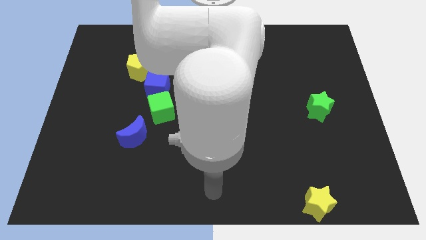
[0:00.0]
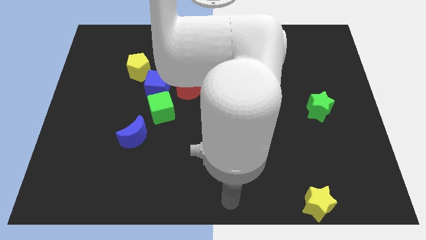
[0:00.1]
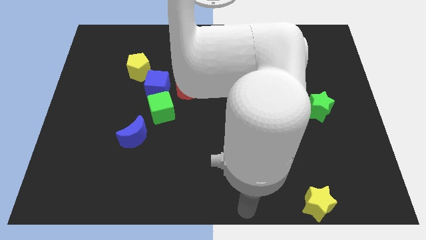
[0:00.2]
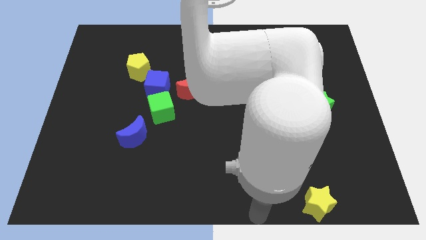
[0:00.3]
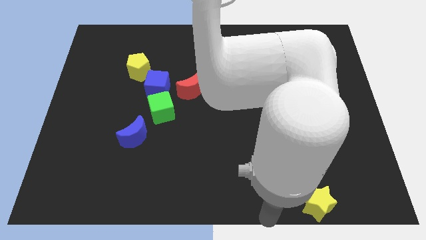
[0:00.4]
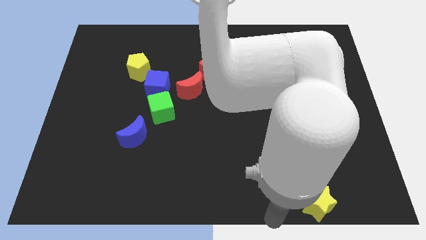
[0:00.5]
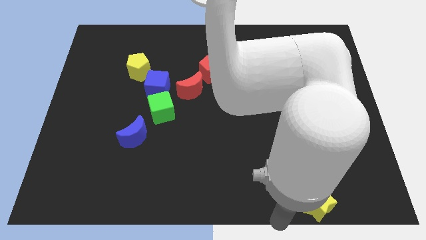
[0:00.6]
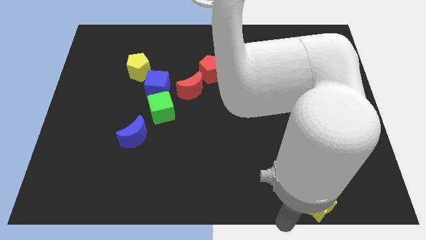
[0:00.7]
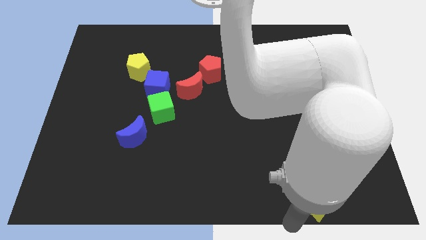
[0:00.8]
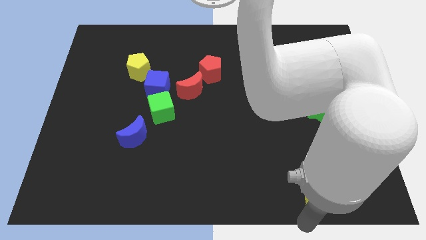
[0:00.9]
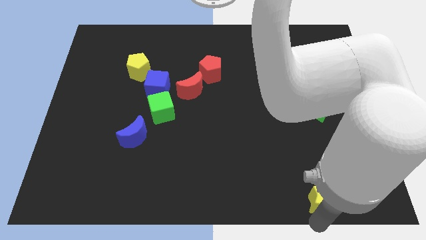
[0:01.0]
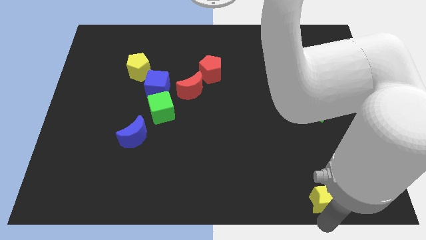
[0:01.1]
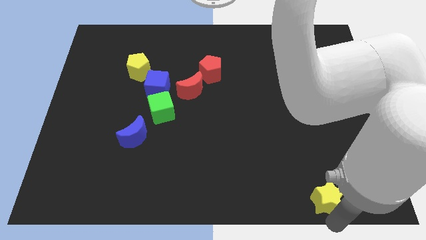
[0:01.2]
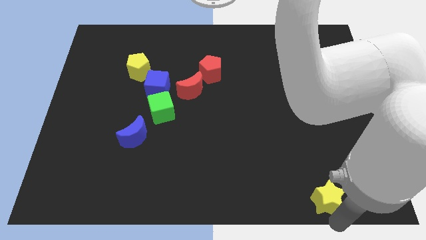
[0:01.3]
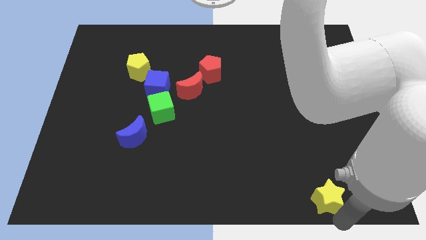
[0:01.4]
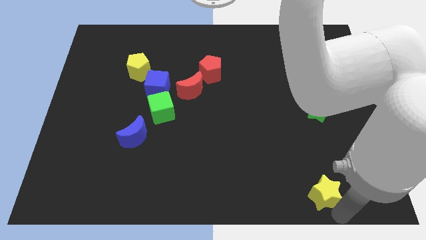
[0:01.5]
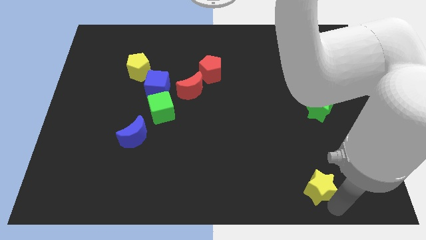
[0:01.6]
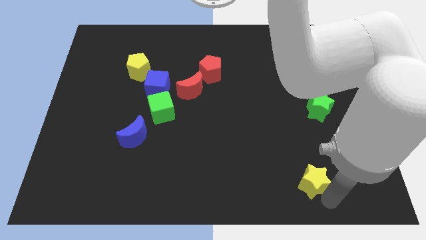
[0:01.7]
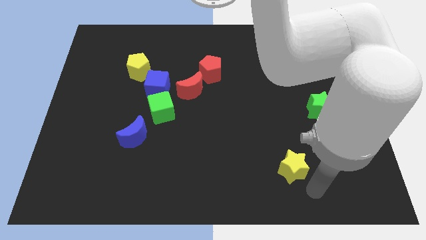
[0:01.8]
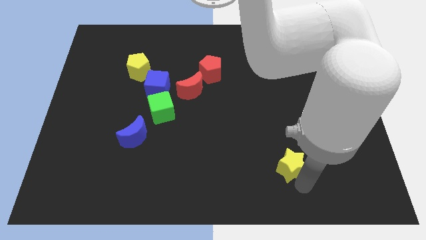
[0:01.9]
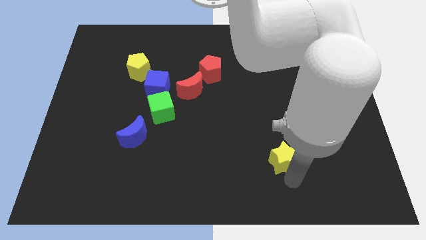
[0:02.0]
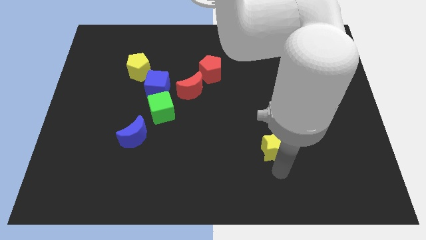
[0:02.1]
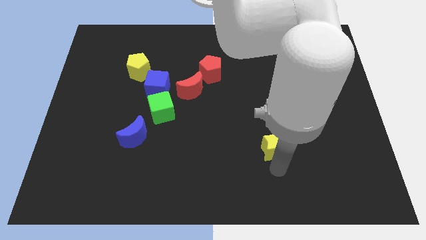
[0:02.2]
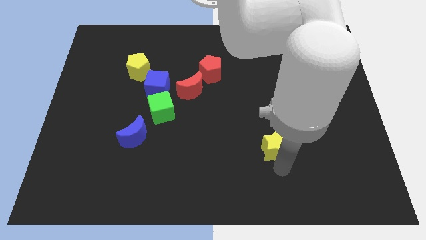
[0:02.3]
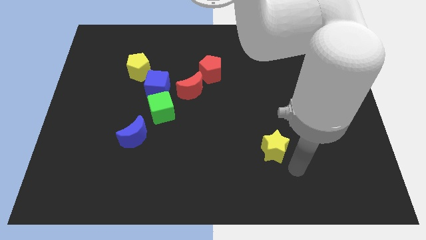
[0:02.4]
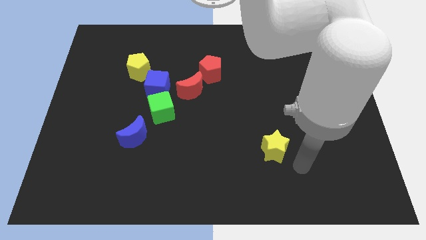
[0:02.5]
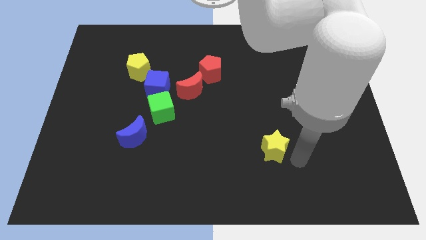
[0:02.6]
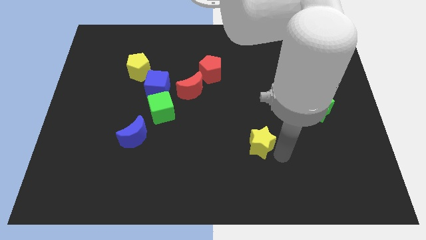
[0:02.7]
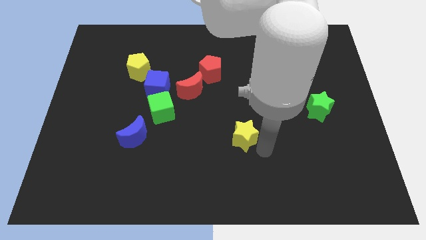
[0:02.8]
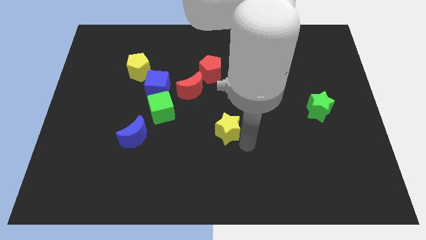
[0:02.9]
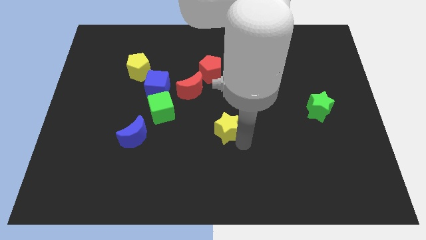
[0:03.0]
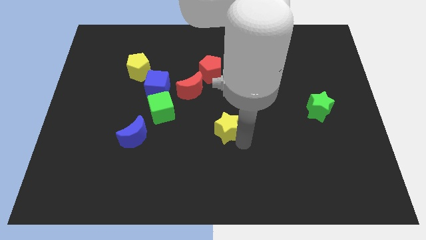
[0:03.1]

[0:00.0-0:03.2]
slide the yellow star towards the center of the board

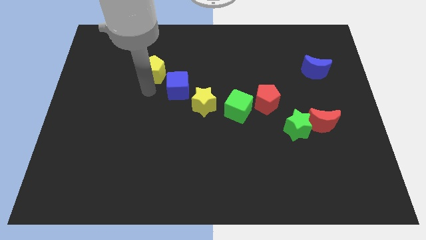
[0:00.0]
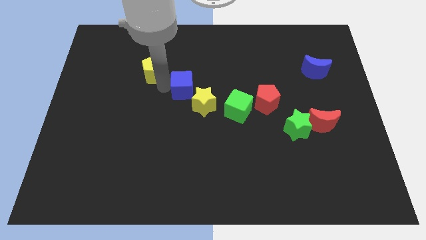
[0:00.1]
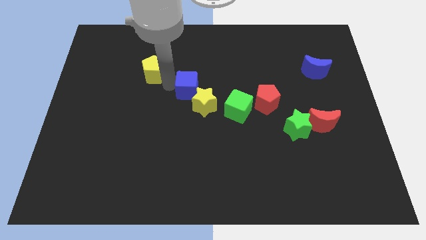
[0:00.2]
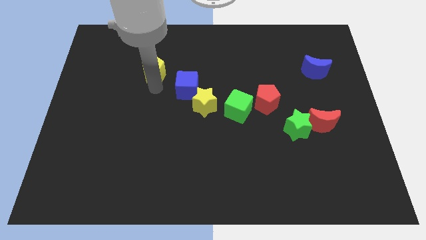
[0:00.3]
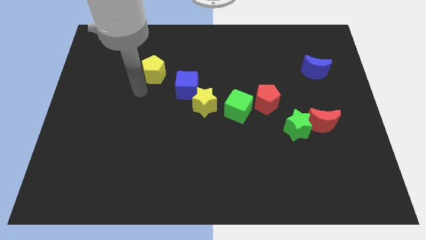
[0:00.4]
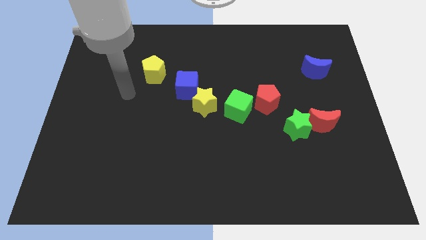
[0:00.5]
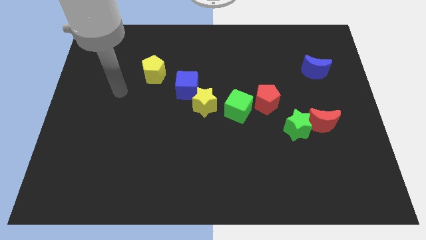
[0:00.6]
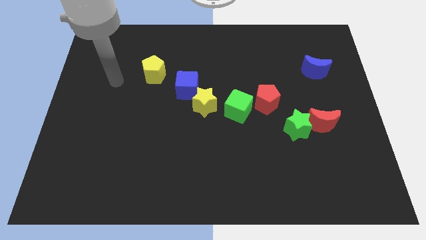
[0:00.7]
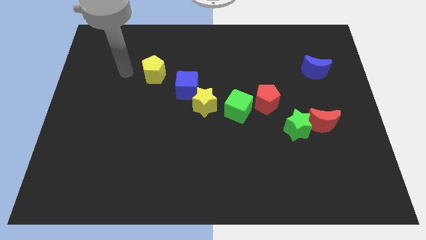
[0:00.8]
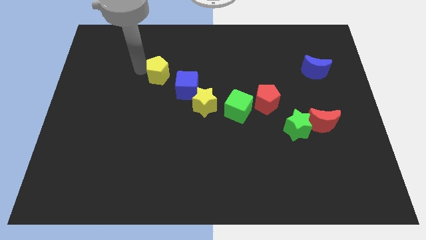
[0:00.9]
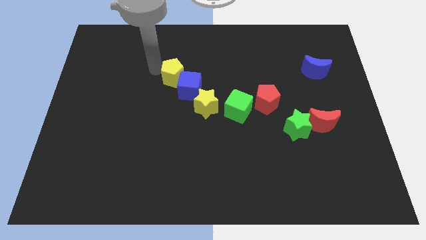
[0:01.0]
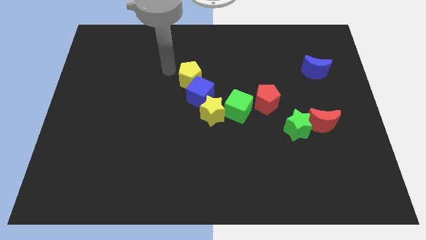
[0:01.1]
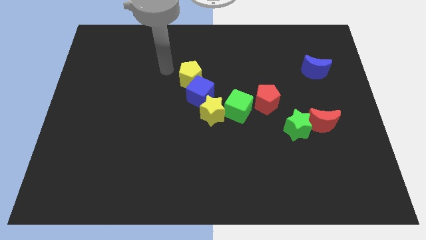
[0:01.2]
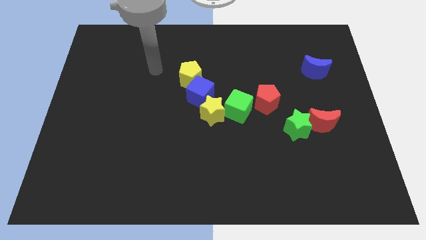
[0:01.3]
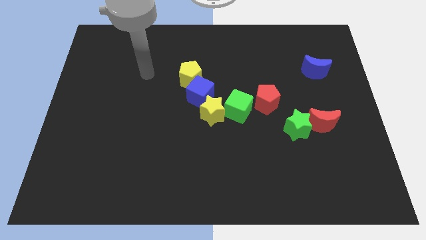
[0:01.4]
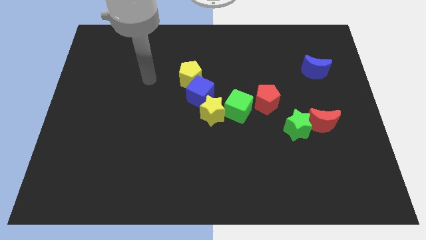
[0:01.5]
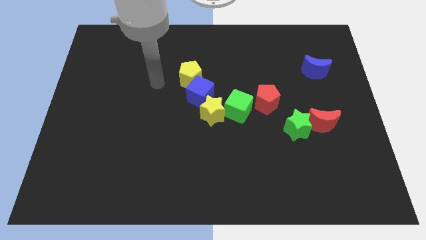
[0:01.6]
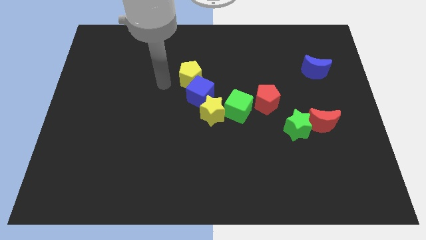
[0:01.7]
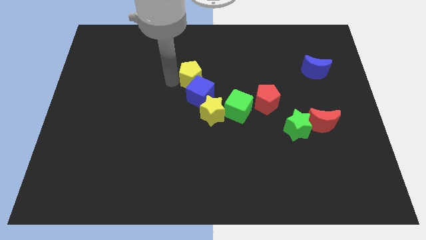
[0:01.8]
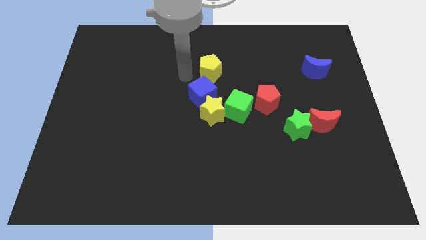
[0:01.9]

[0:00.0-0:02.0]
push the blue cube and yellow pentagon towards center

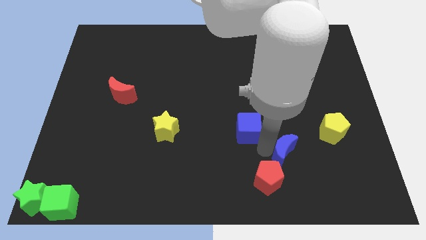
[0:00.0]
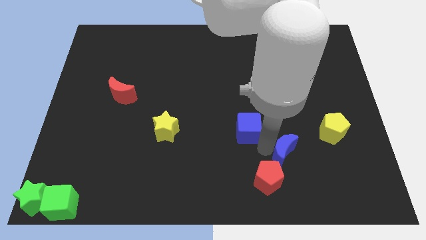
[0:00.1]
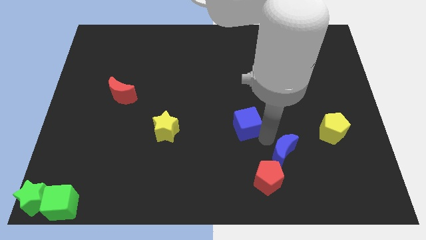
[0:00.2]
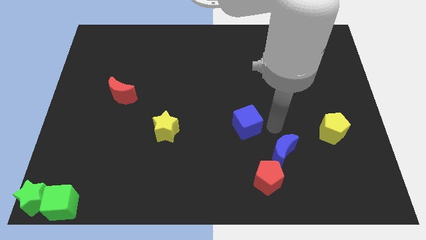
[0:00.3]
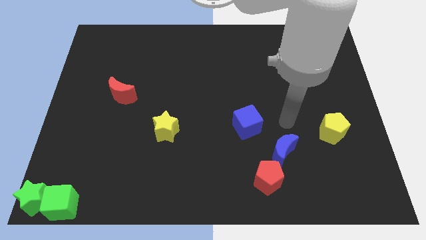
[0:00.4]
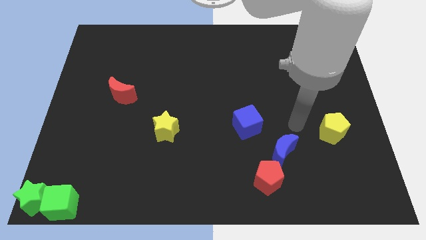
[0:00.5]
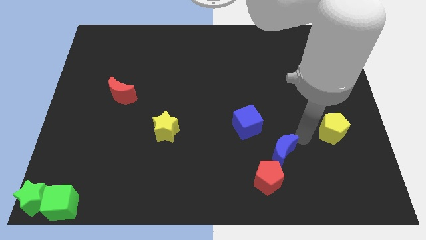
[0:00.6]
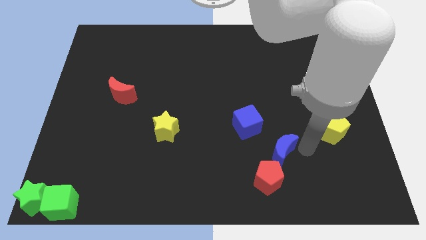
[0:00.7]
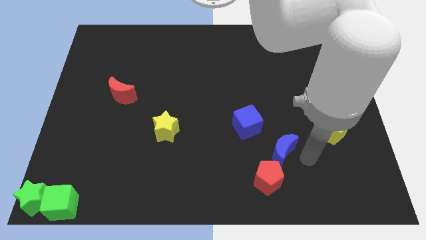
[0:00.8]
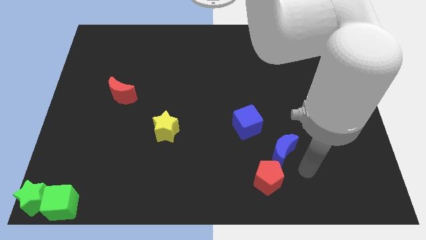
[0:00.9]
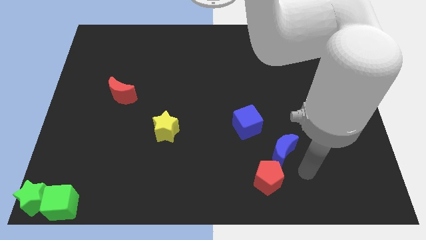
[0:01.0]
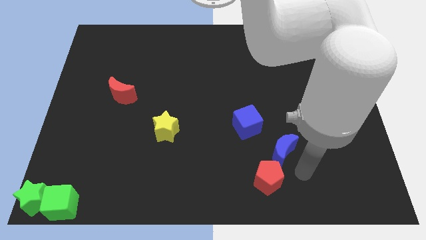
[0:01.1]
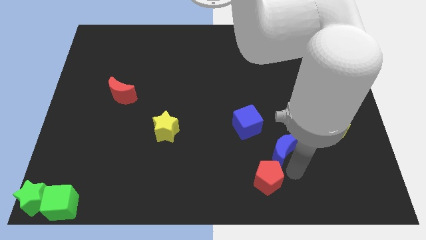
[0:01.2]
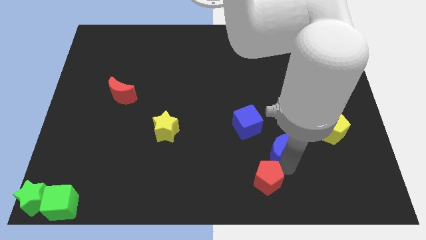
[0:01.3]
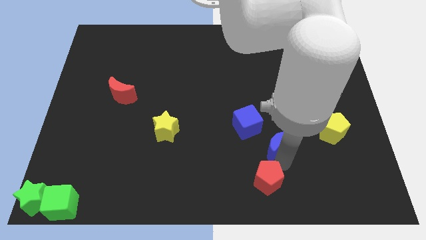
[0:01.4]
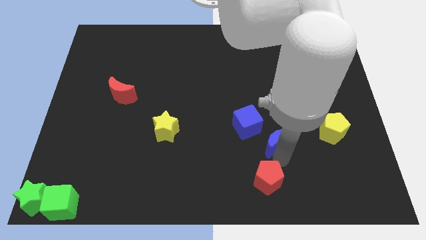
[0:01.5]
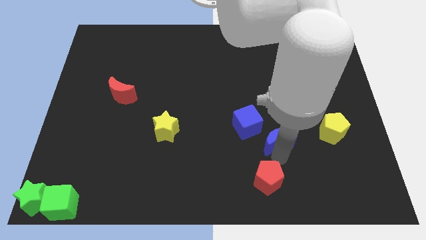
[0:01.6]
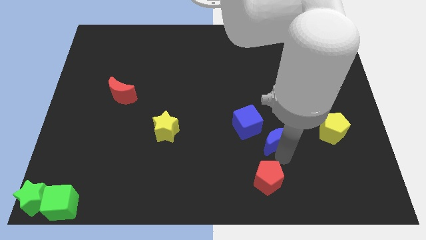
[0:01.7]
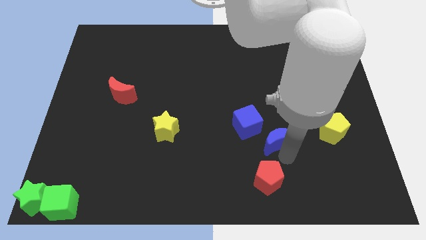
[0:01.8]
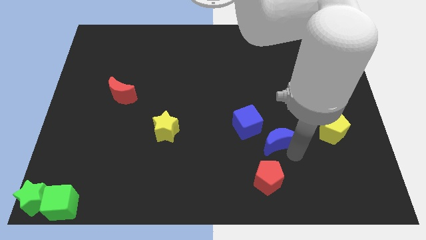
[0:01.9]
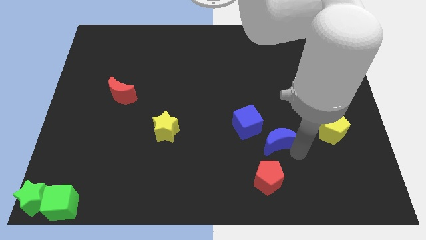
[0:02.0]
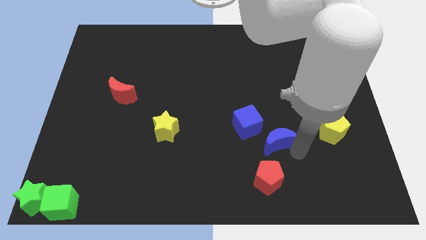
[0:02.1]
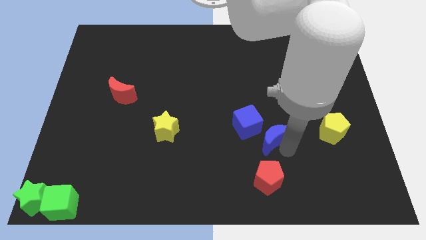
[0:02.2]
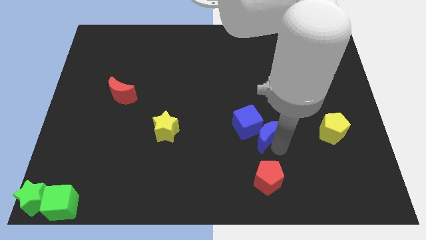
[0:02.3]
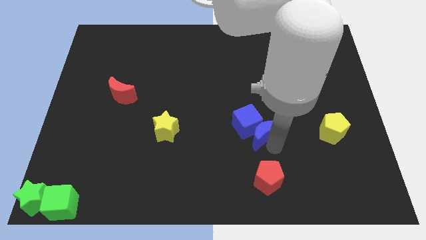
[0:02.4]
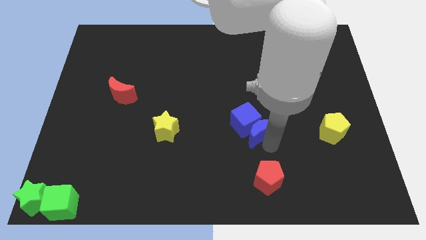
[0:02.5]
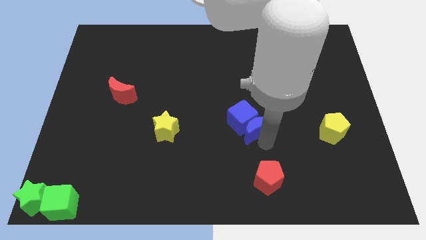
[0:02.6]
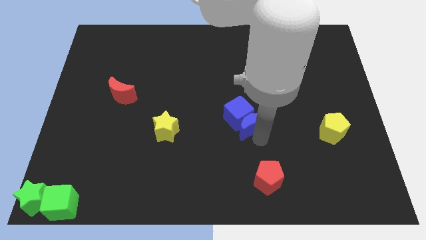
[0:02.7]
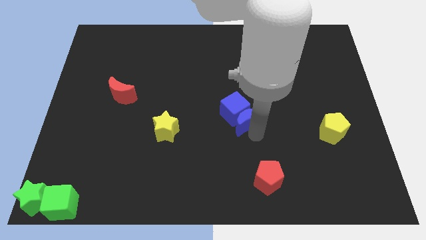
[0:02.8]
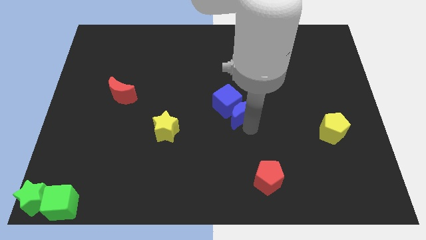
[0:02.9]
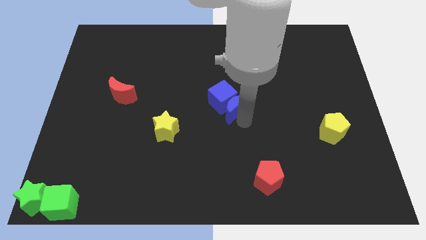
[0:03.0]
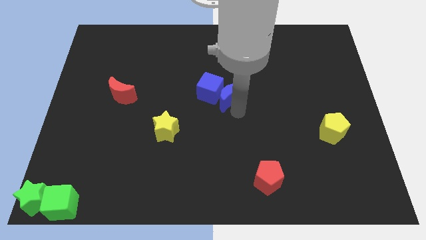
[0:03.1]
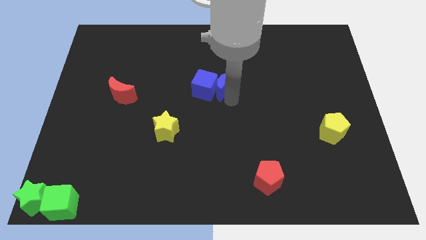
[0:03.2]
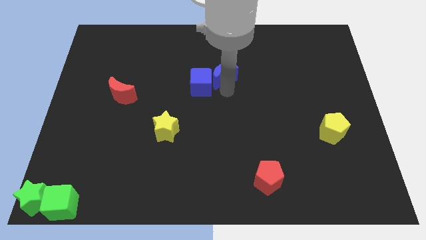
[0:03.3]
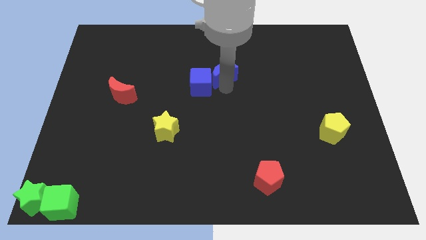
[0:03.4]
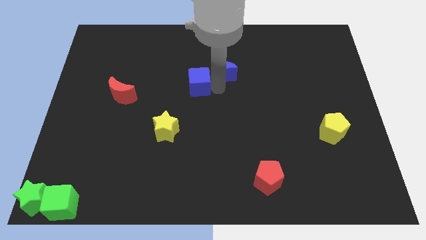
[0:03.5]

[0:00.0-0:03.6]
separate blue moon from red pentagon

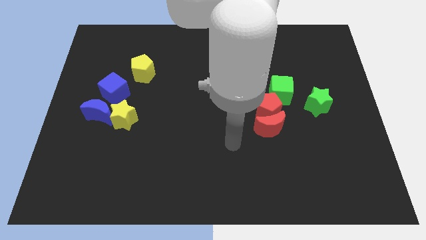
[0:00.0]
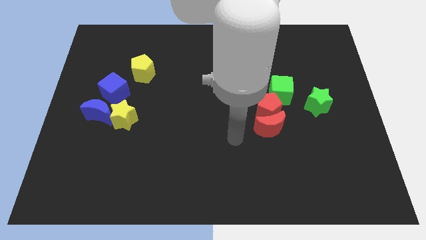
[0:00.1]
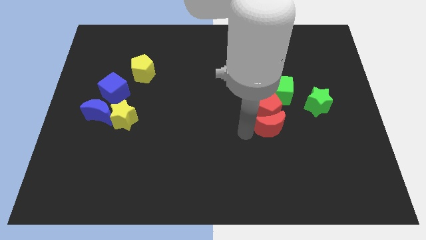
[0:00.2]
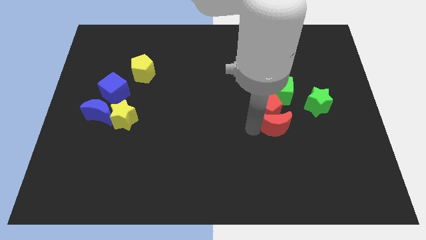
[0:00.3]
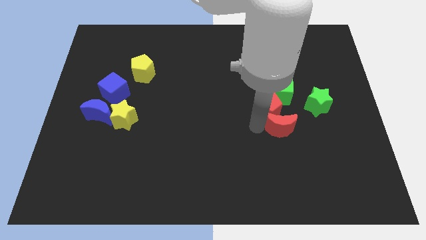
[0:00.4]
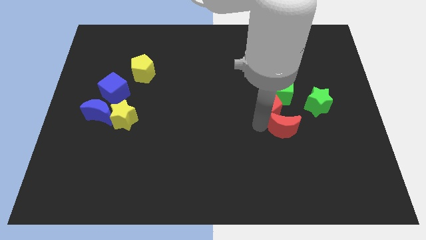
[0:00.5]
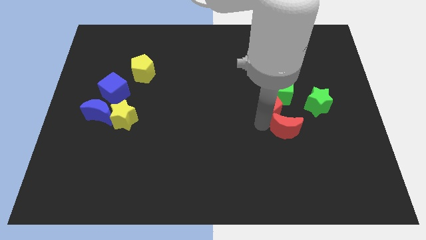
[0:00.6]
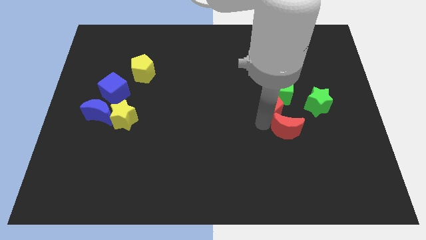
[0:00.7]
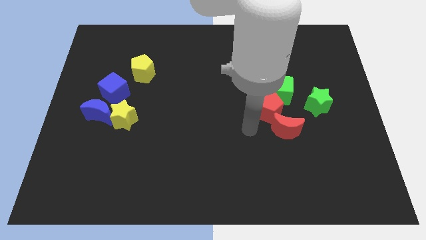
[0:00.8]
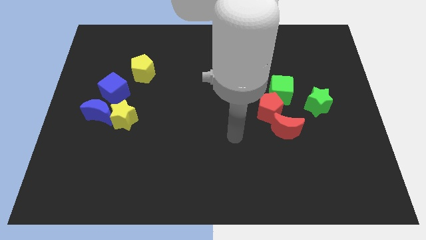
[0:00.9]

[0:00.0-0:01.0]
touch the top left side of red moon to the bottom side of red pentagon
